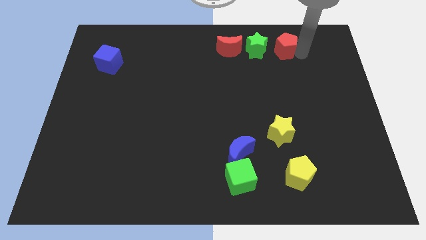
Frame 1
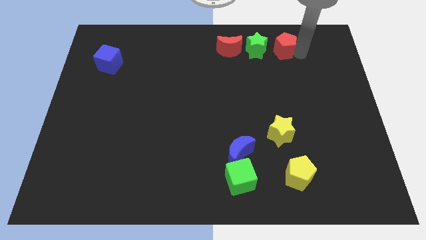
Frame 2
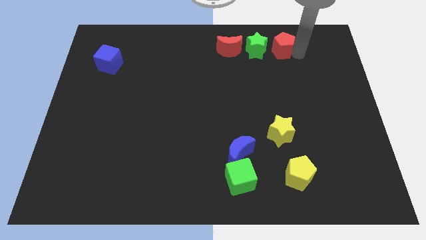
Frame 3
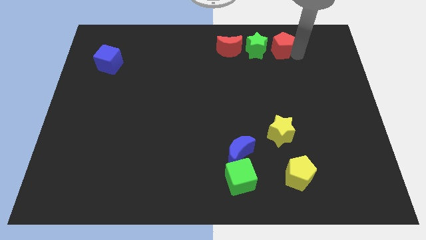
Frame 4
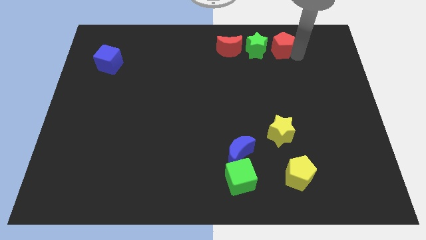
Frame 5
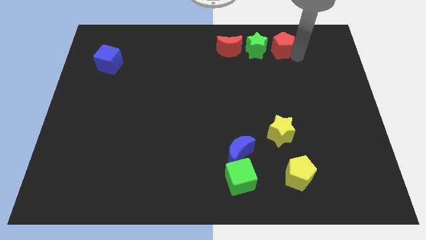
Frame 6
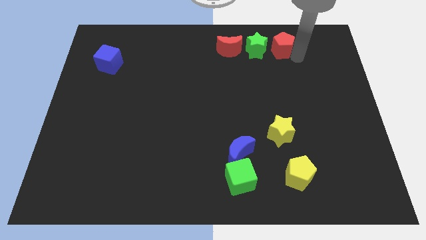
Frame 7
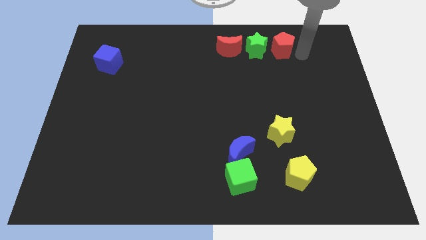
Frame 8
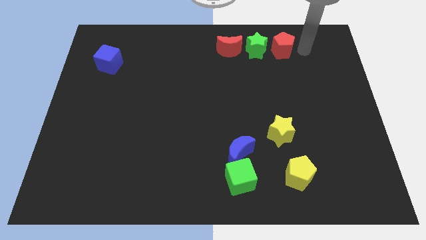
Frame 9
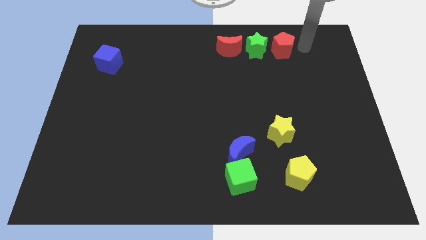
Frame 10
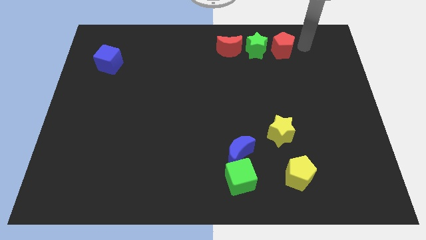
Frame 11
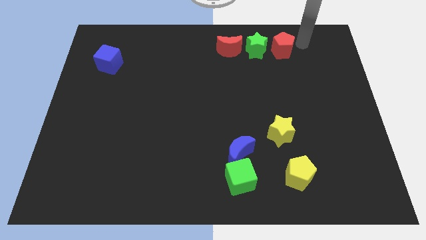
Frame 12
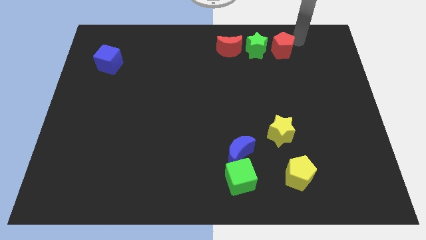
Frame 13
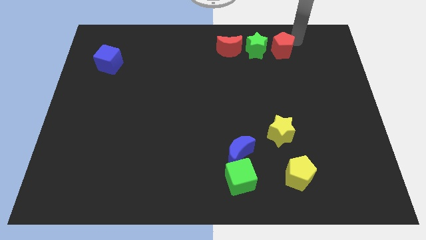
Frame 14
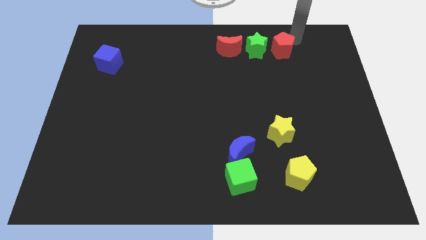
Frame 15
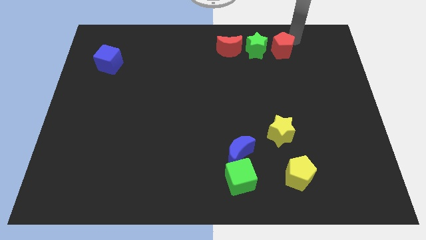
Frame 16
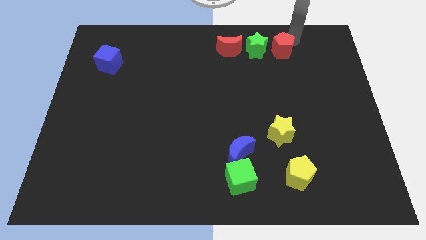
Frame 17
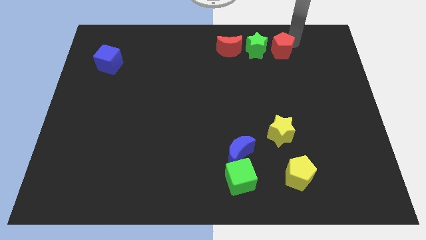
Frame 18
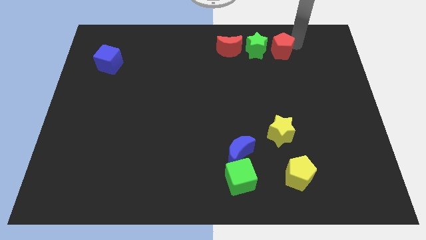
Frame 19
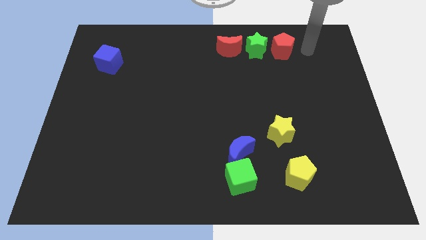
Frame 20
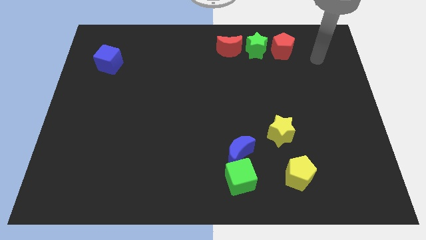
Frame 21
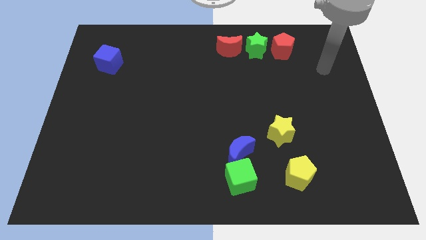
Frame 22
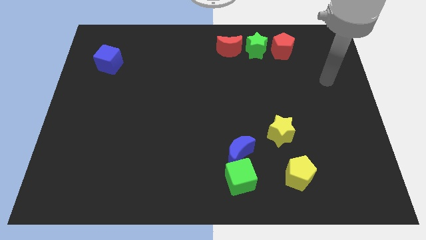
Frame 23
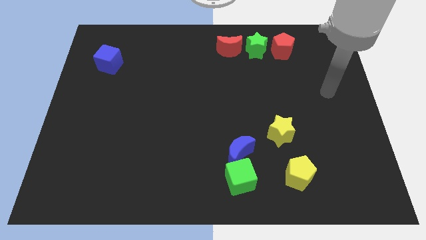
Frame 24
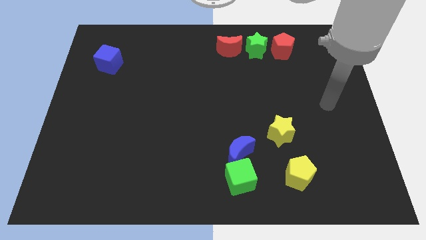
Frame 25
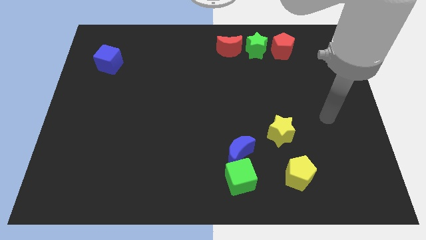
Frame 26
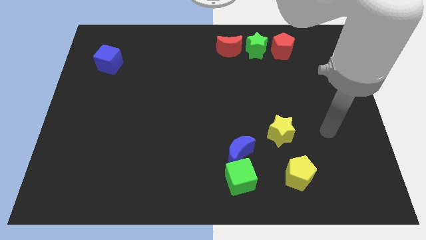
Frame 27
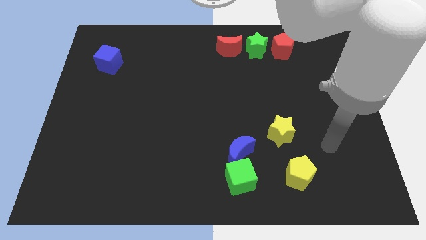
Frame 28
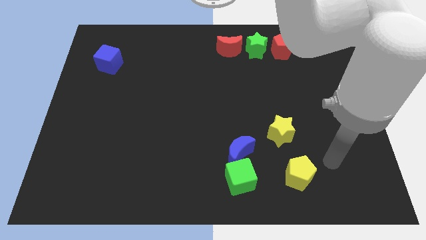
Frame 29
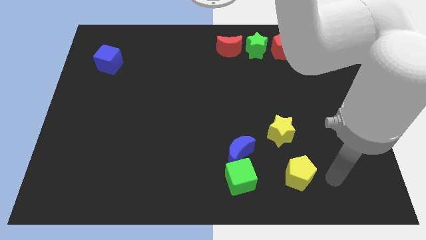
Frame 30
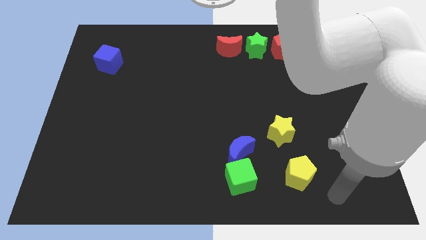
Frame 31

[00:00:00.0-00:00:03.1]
move your arm away from red pentagon

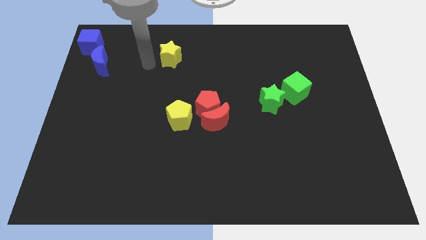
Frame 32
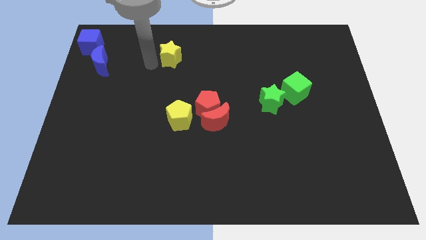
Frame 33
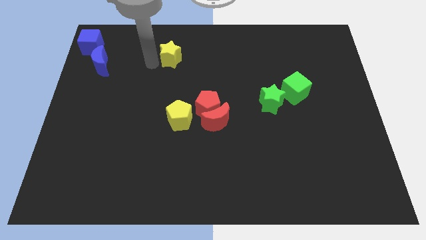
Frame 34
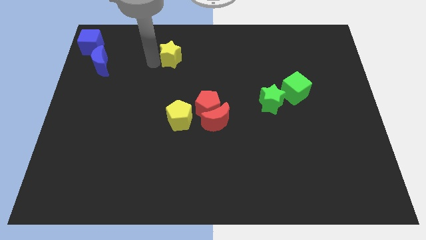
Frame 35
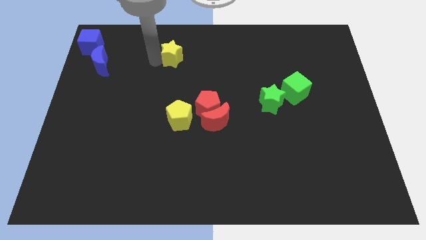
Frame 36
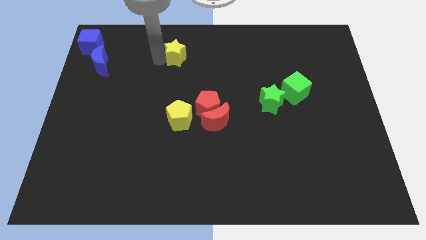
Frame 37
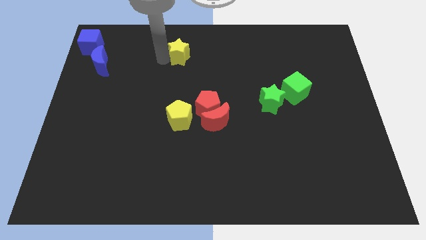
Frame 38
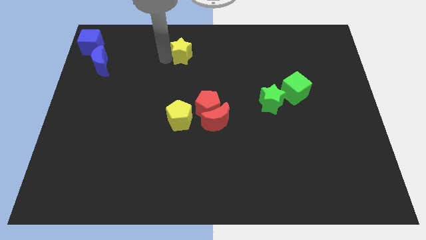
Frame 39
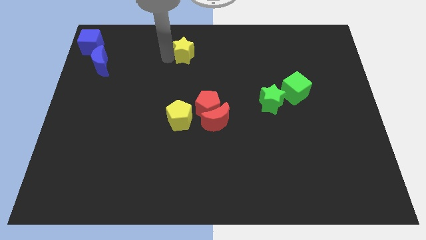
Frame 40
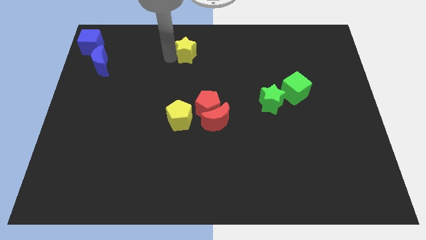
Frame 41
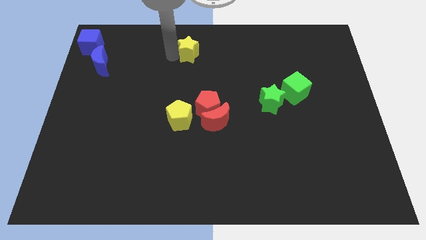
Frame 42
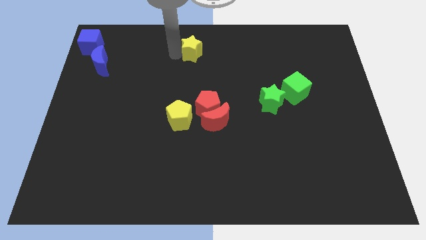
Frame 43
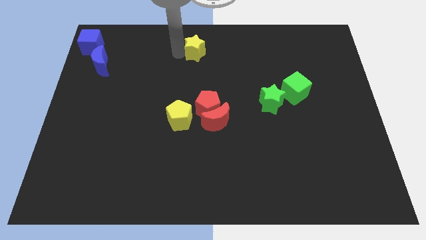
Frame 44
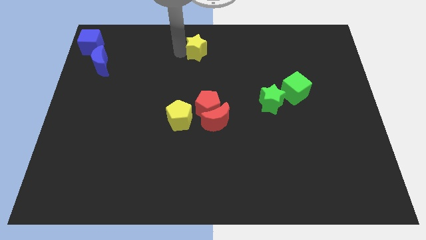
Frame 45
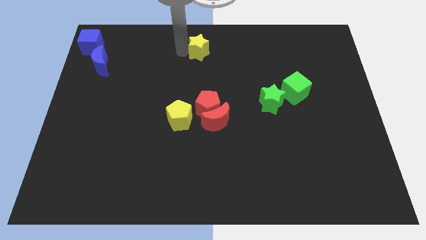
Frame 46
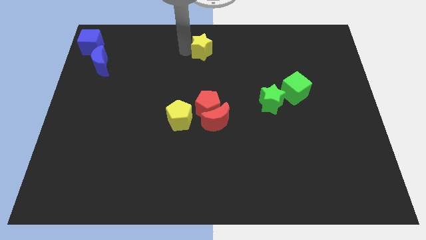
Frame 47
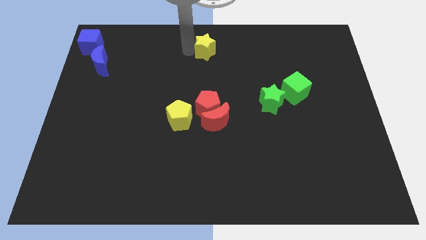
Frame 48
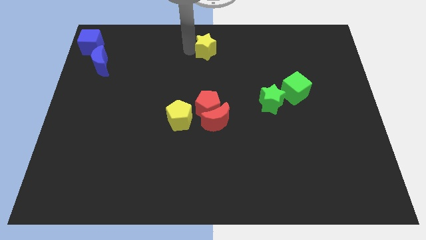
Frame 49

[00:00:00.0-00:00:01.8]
push the yellow star above the red pentagon

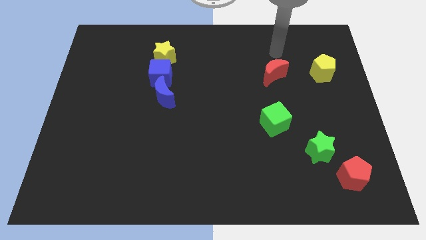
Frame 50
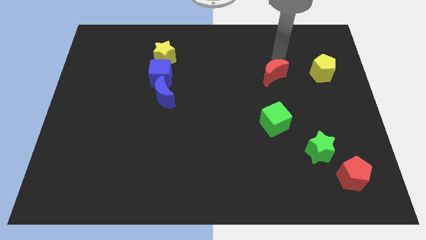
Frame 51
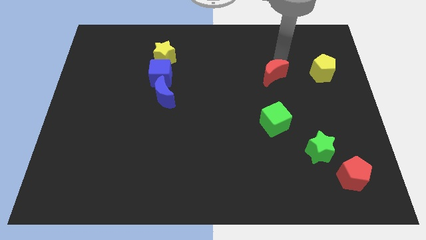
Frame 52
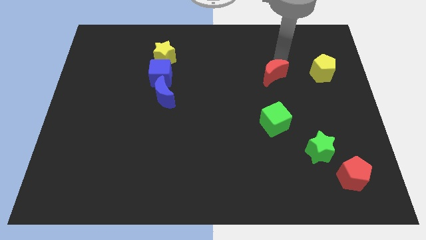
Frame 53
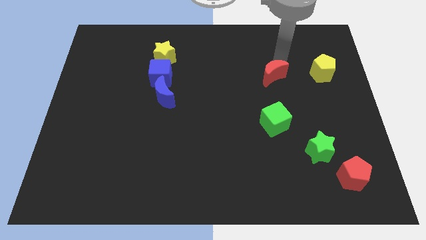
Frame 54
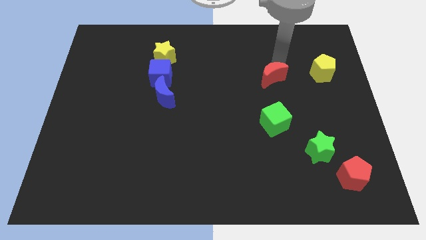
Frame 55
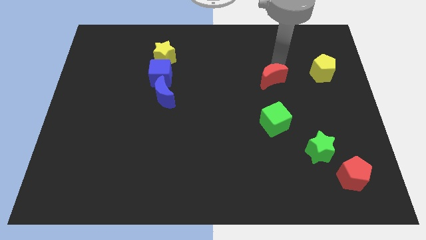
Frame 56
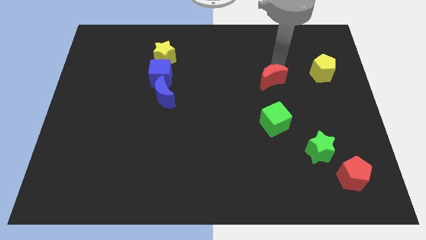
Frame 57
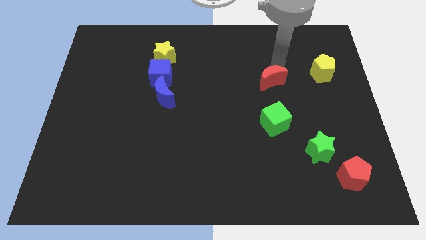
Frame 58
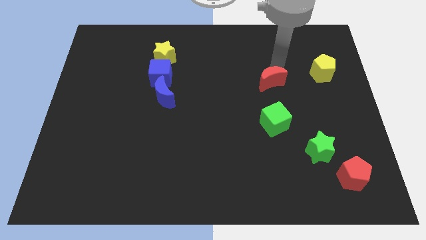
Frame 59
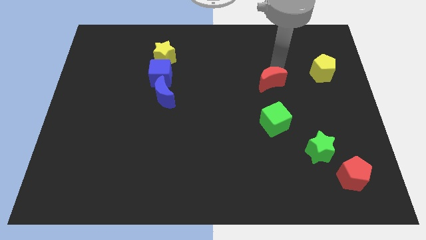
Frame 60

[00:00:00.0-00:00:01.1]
tap on the top edge of red crescent

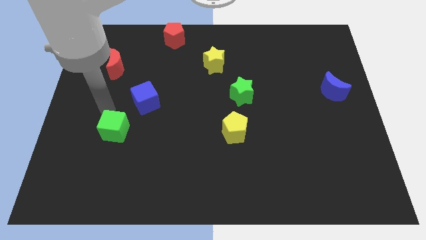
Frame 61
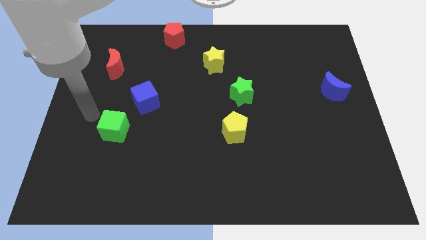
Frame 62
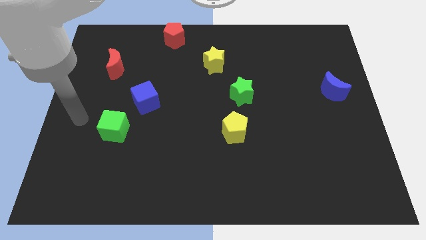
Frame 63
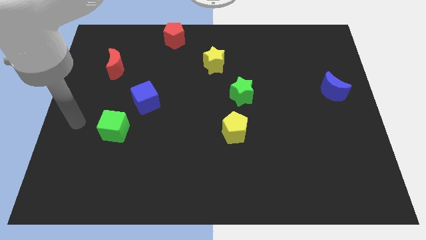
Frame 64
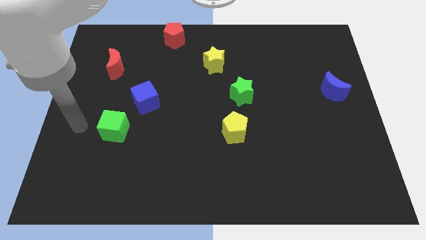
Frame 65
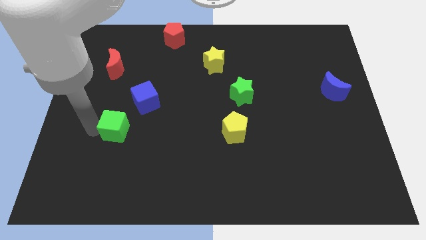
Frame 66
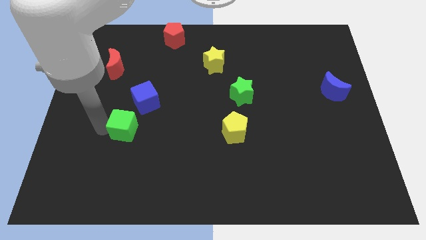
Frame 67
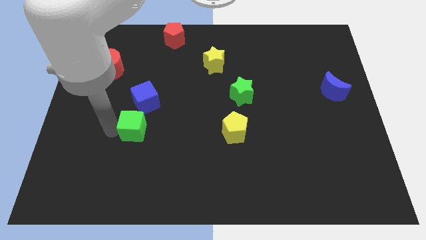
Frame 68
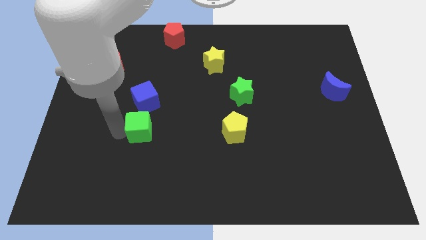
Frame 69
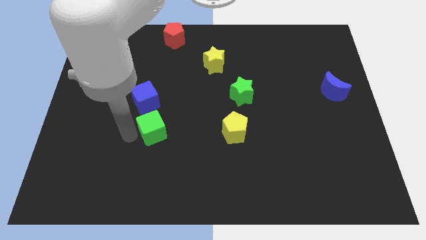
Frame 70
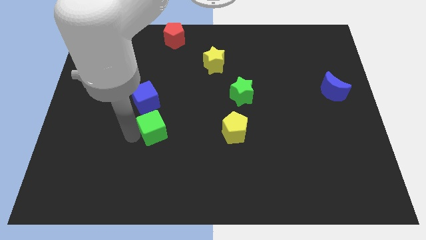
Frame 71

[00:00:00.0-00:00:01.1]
push green cube below the blue cube

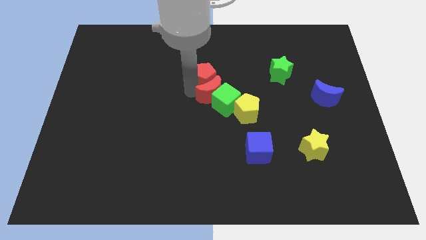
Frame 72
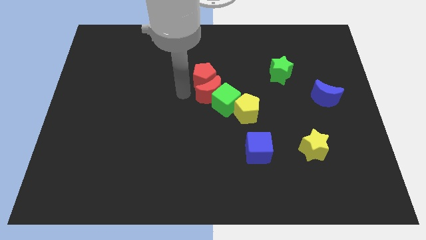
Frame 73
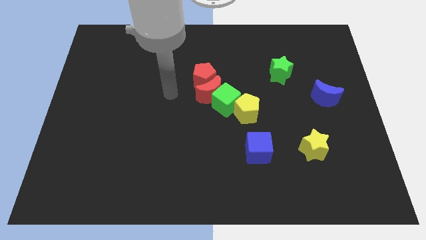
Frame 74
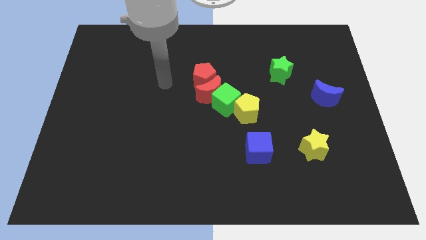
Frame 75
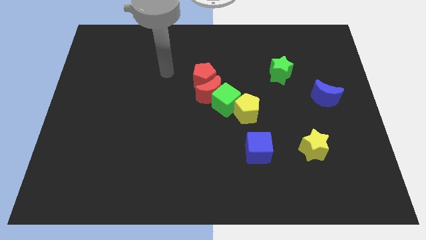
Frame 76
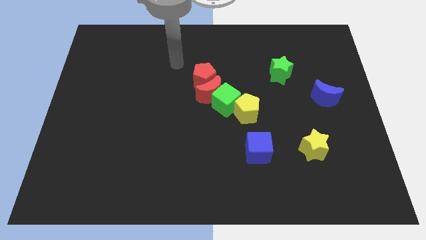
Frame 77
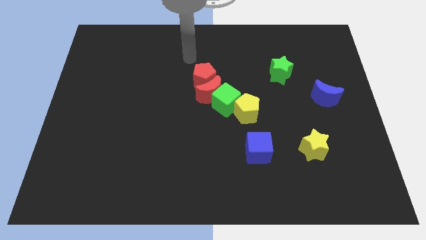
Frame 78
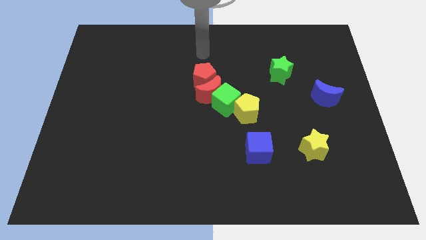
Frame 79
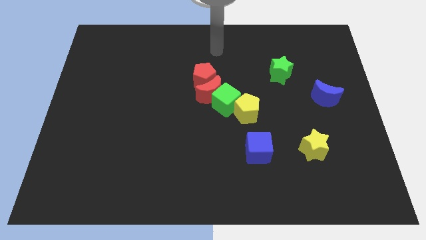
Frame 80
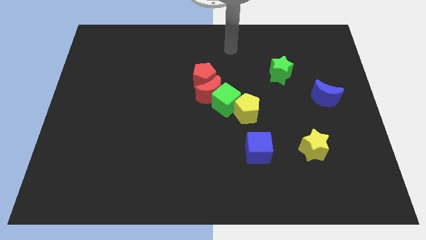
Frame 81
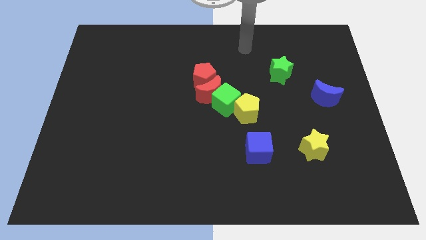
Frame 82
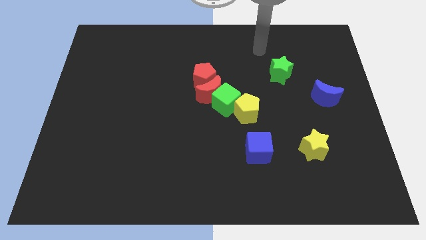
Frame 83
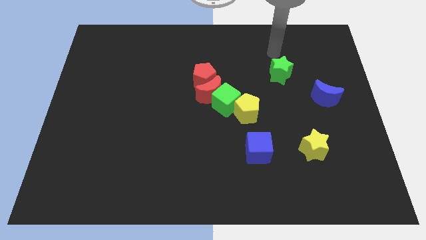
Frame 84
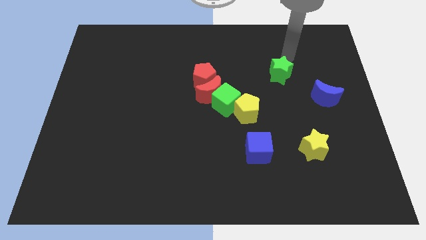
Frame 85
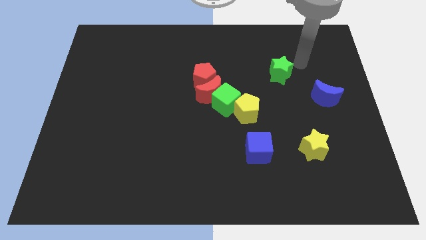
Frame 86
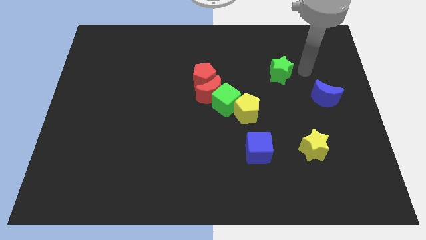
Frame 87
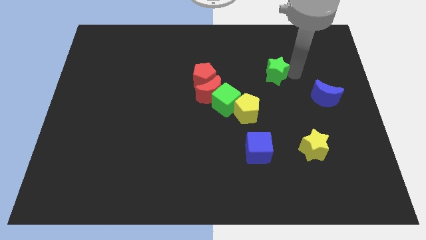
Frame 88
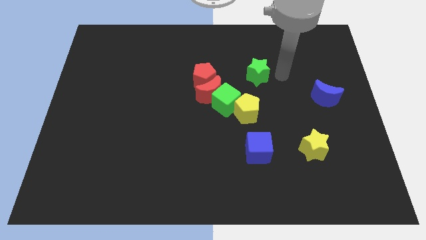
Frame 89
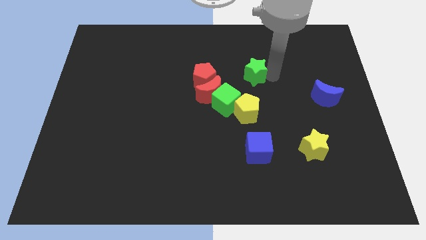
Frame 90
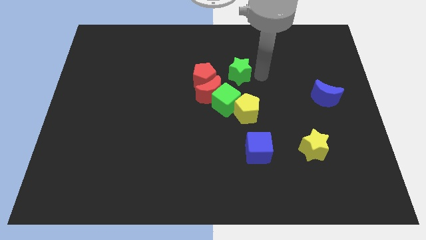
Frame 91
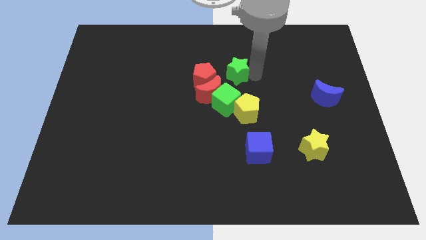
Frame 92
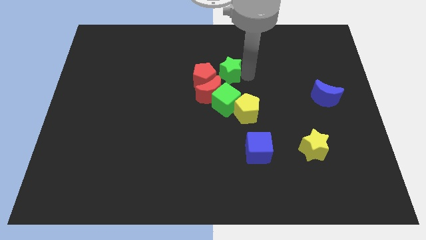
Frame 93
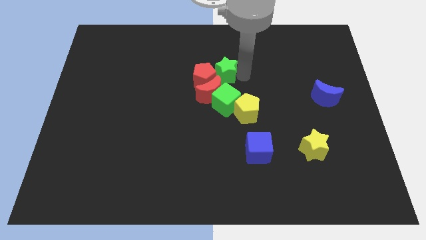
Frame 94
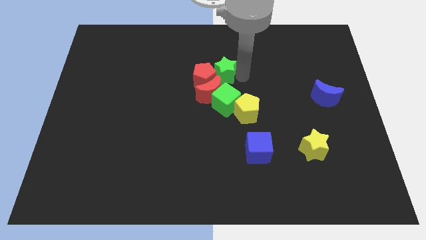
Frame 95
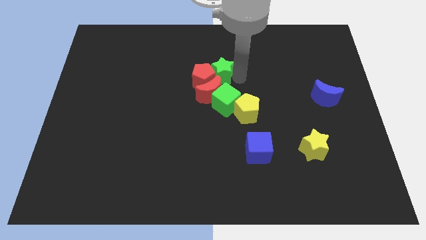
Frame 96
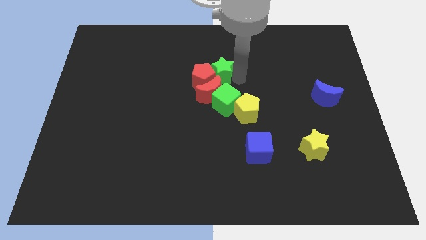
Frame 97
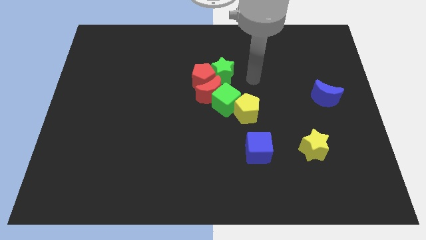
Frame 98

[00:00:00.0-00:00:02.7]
move the green star into the right side of the red pentagon
